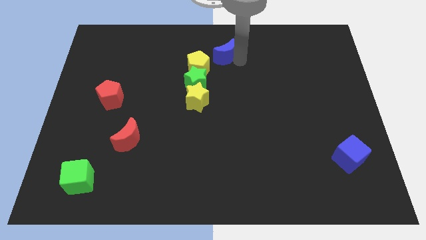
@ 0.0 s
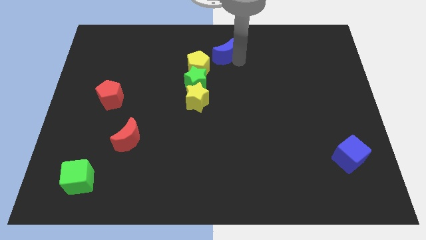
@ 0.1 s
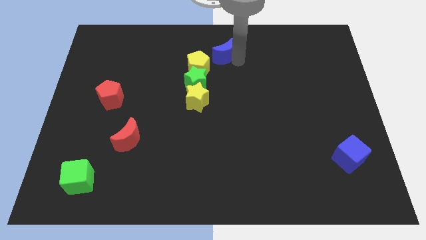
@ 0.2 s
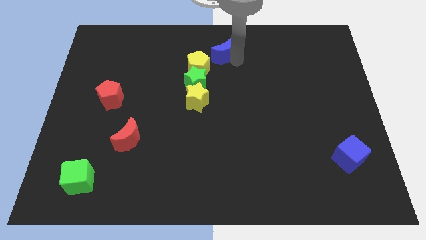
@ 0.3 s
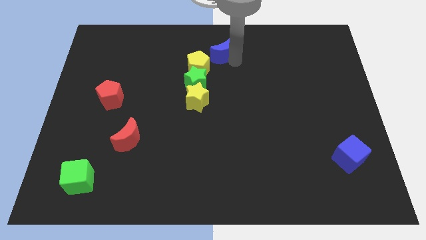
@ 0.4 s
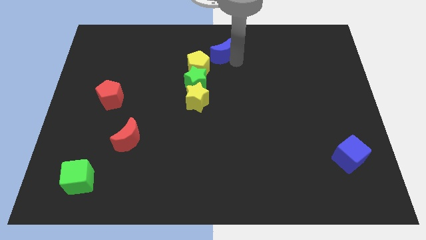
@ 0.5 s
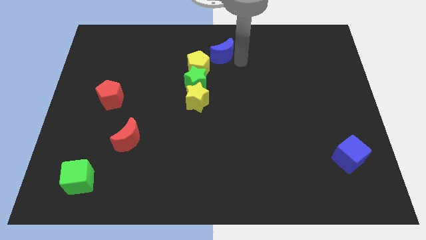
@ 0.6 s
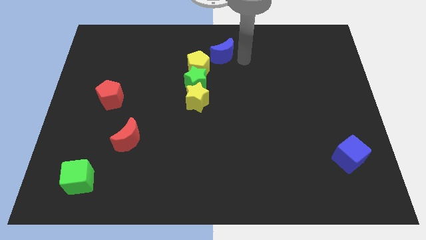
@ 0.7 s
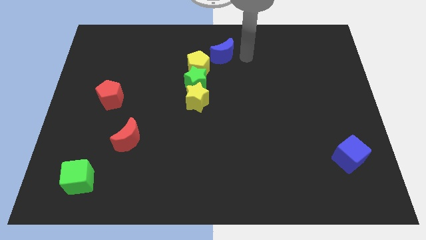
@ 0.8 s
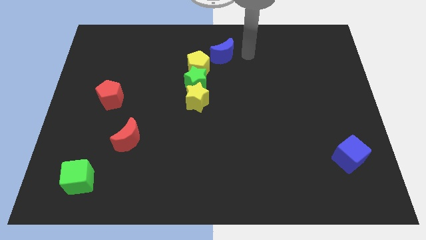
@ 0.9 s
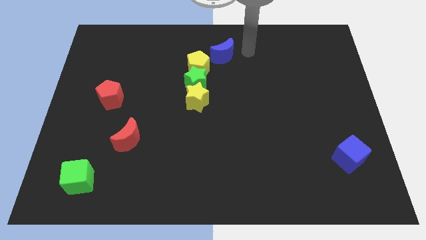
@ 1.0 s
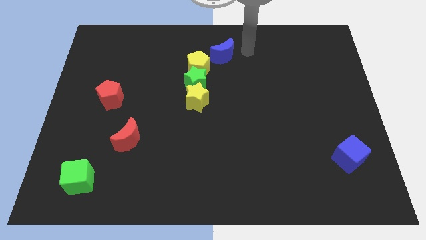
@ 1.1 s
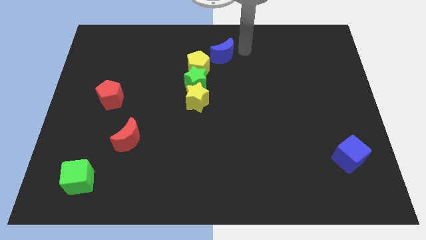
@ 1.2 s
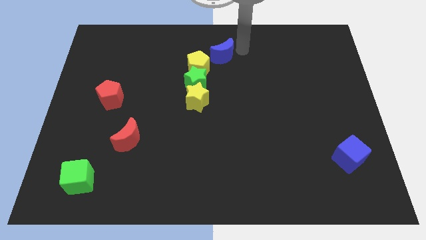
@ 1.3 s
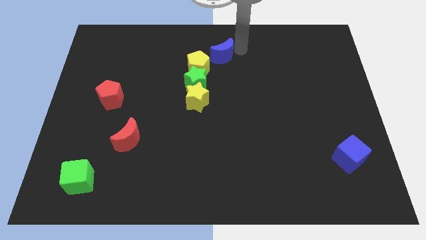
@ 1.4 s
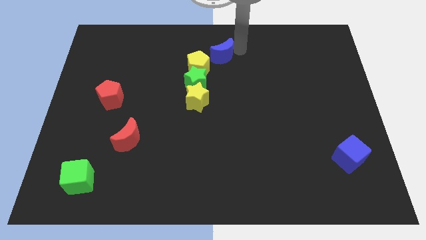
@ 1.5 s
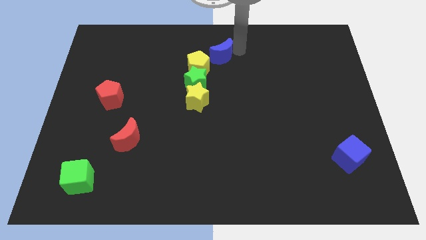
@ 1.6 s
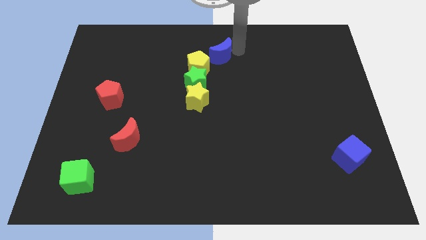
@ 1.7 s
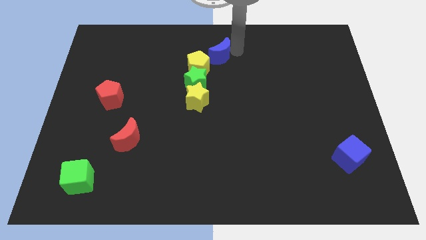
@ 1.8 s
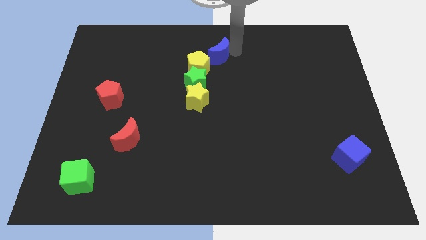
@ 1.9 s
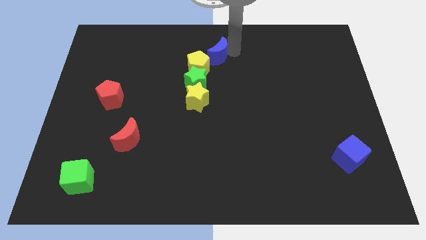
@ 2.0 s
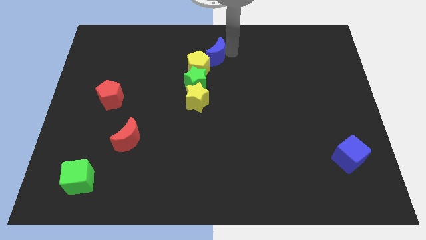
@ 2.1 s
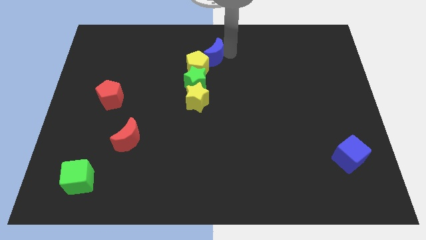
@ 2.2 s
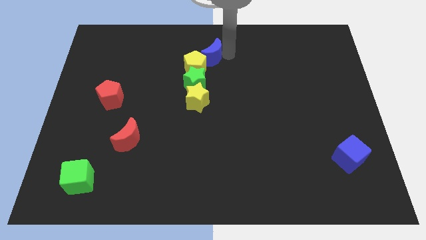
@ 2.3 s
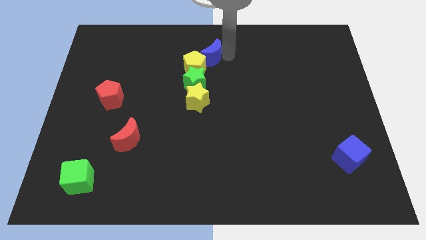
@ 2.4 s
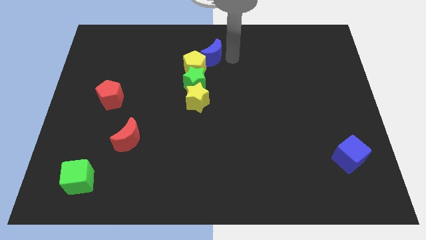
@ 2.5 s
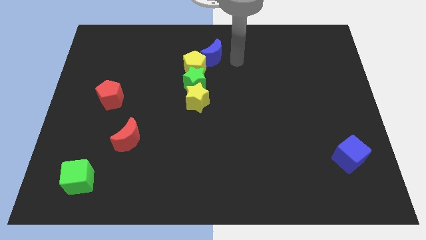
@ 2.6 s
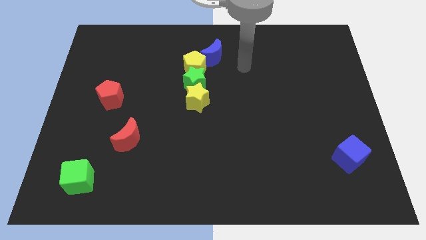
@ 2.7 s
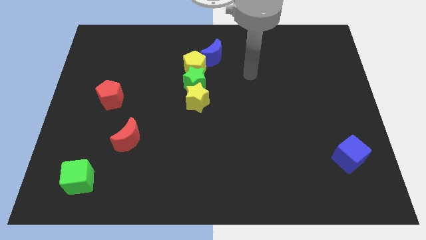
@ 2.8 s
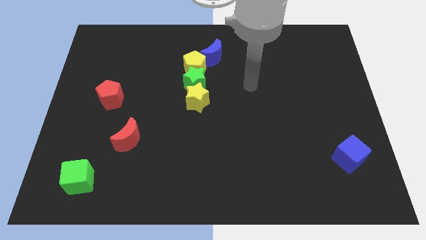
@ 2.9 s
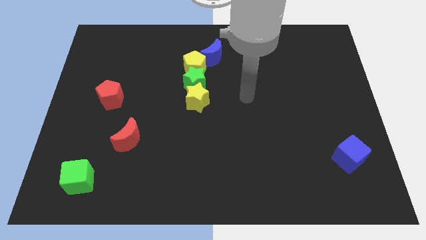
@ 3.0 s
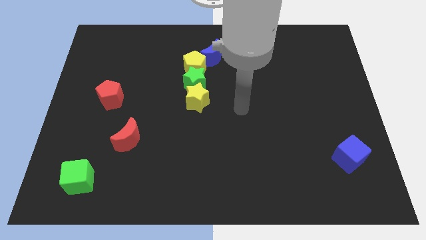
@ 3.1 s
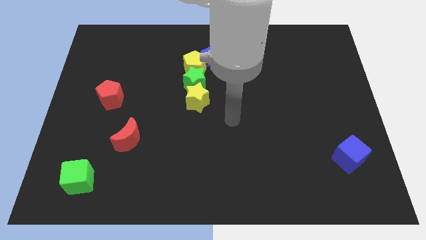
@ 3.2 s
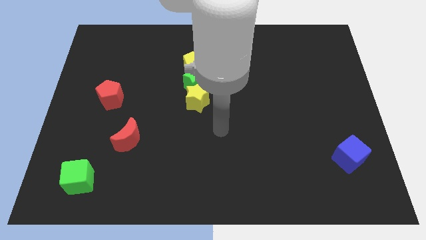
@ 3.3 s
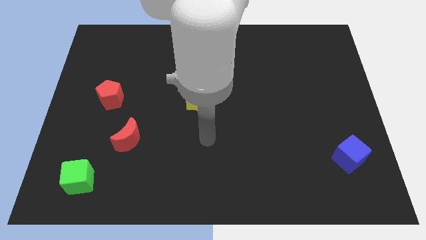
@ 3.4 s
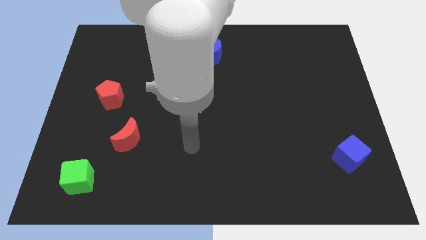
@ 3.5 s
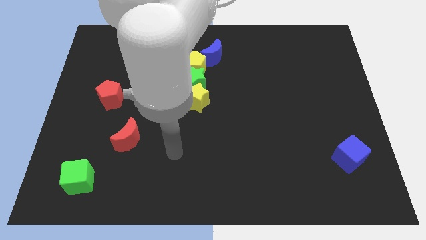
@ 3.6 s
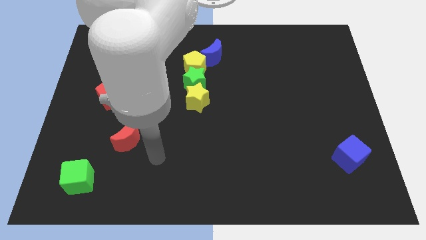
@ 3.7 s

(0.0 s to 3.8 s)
push blue moon in to yellow pentagon

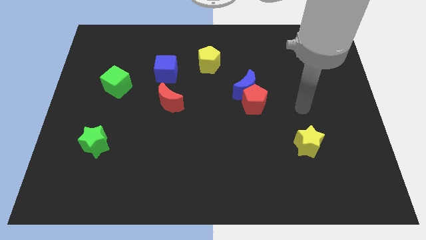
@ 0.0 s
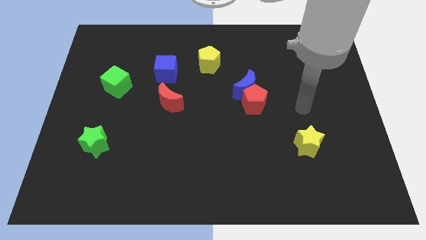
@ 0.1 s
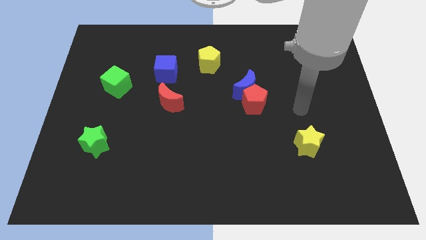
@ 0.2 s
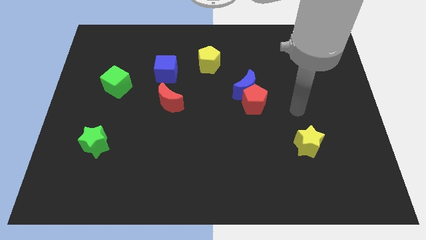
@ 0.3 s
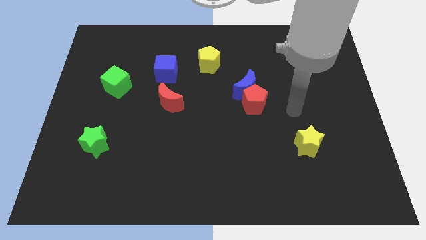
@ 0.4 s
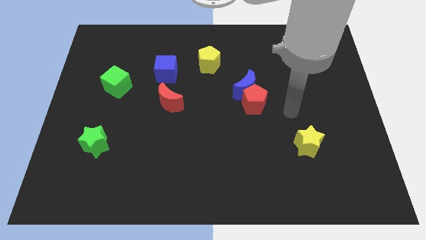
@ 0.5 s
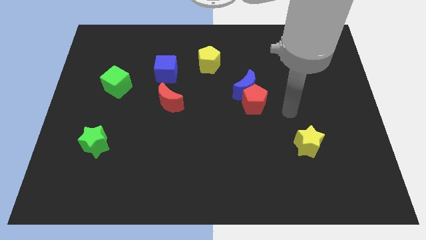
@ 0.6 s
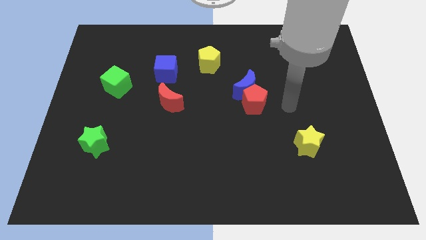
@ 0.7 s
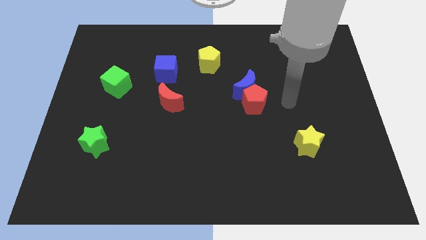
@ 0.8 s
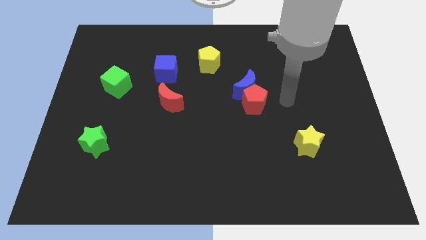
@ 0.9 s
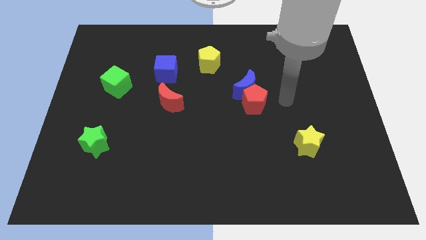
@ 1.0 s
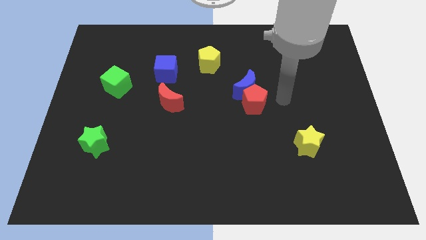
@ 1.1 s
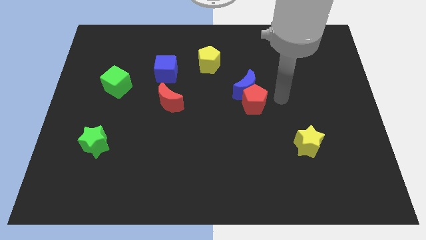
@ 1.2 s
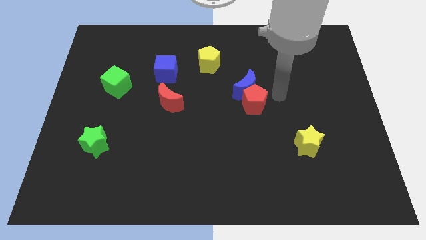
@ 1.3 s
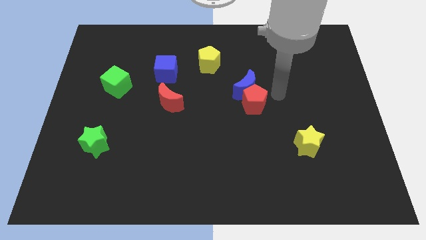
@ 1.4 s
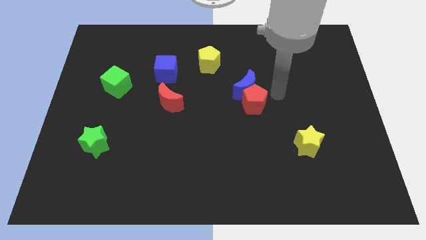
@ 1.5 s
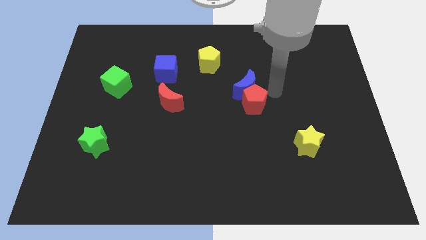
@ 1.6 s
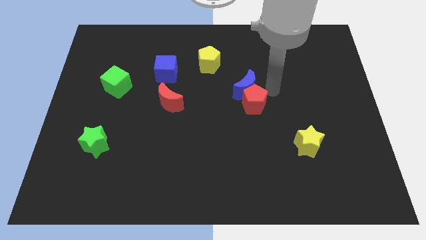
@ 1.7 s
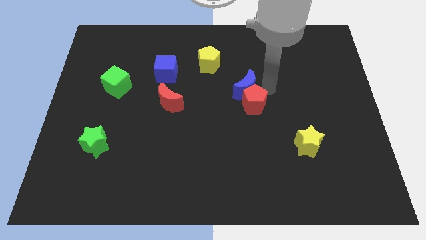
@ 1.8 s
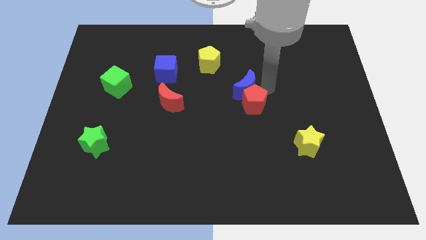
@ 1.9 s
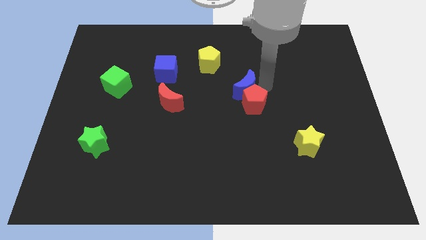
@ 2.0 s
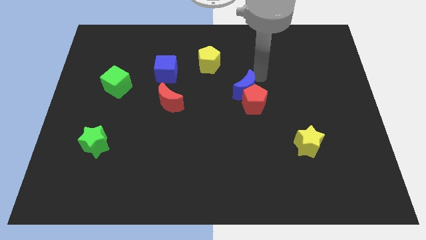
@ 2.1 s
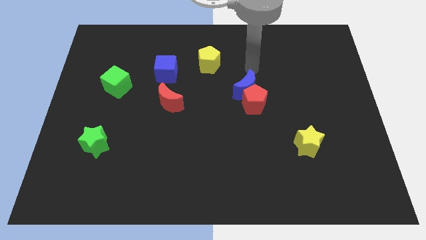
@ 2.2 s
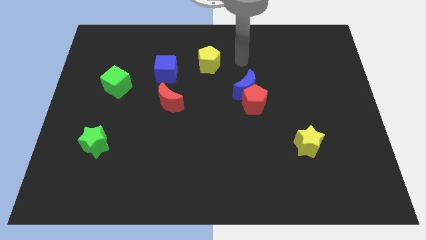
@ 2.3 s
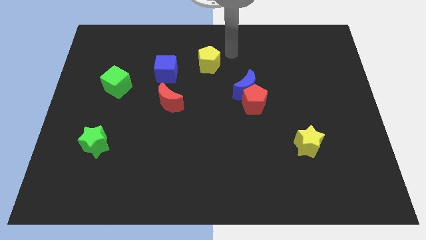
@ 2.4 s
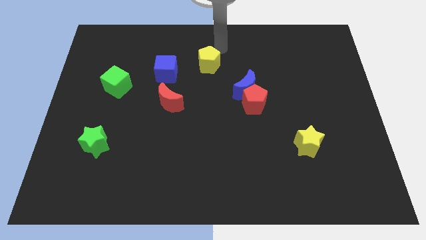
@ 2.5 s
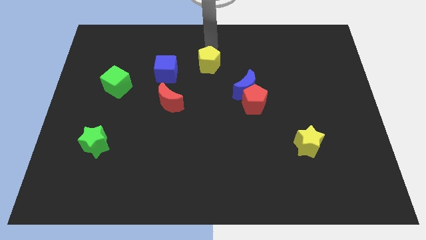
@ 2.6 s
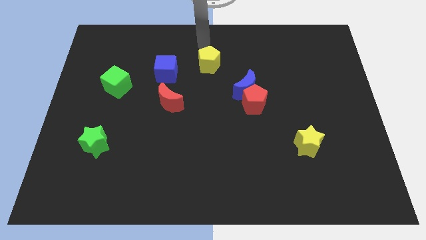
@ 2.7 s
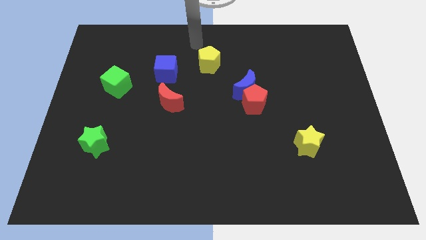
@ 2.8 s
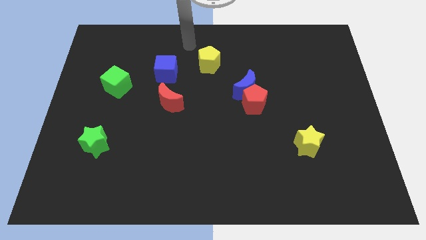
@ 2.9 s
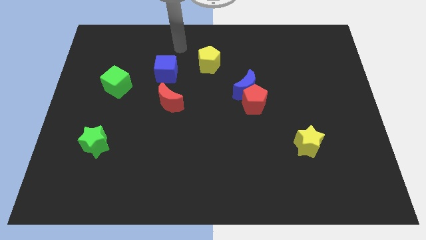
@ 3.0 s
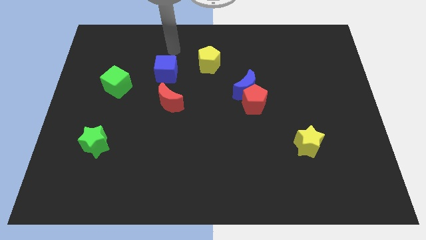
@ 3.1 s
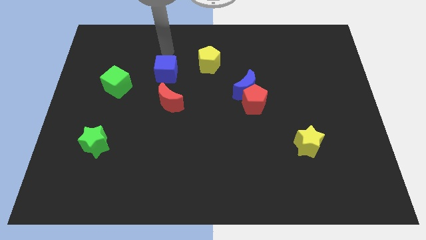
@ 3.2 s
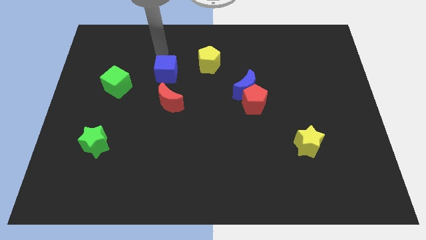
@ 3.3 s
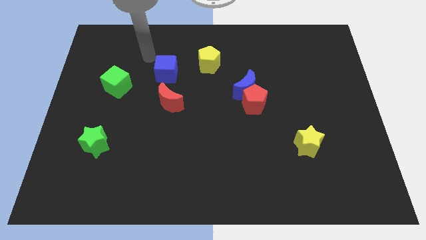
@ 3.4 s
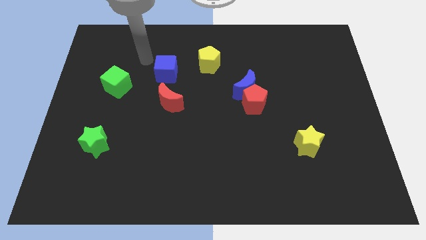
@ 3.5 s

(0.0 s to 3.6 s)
place your arm at the left side of the blue cube

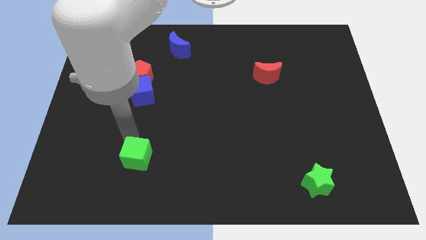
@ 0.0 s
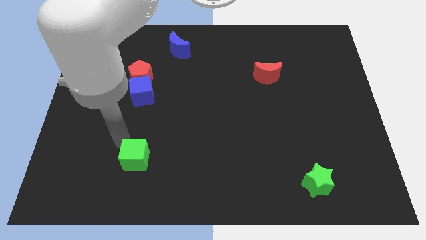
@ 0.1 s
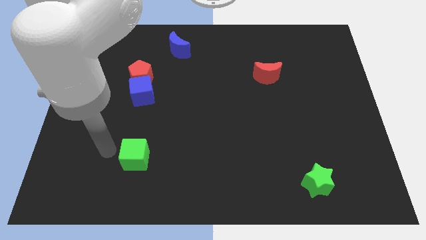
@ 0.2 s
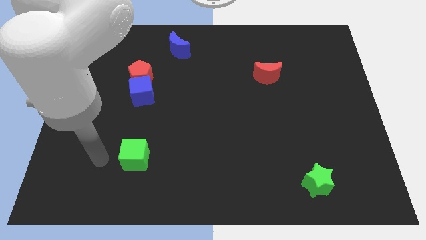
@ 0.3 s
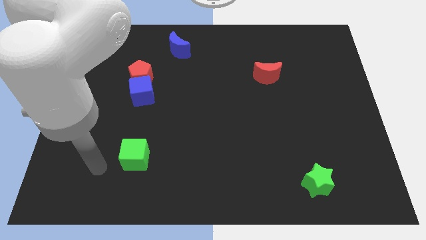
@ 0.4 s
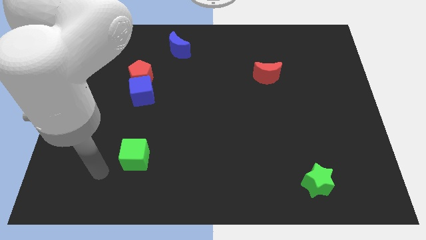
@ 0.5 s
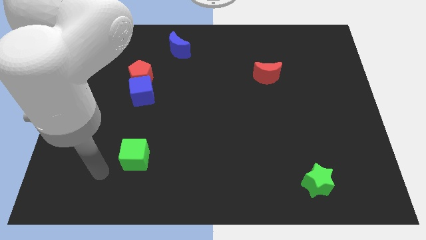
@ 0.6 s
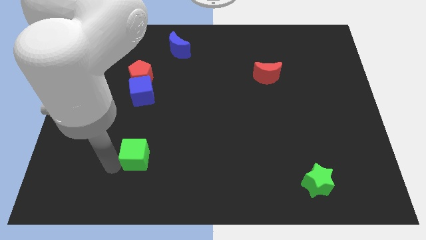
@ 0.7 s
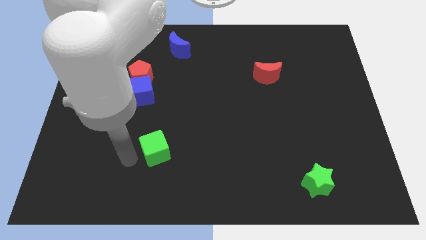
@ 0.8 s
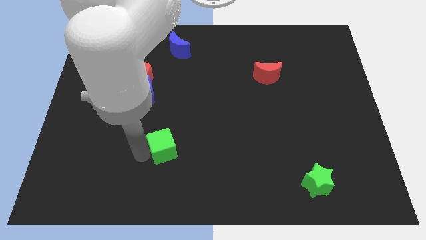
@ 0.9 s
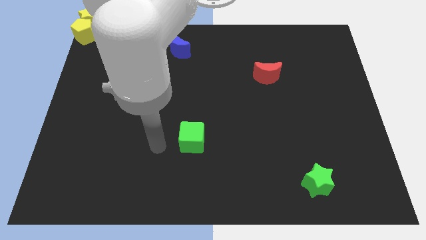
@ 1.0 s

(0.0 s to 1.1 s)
push the green cube towards the center of the board

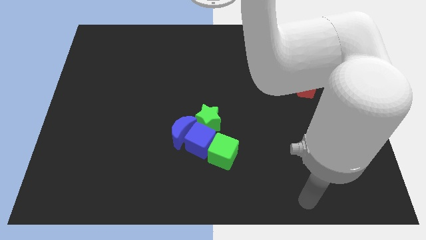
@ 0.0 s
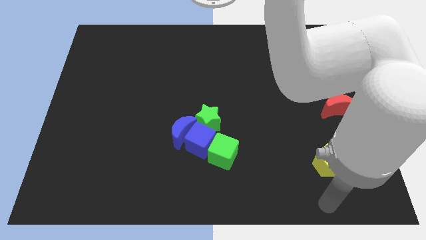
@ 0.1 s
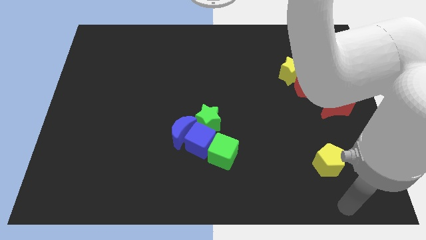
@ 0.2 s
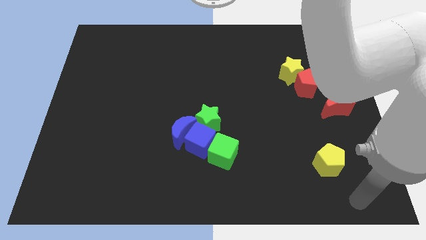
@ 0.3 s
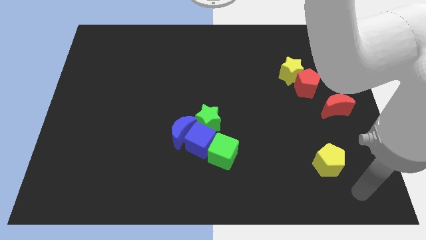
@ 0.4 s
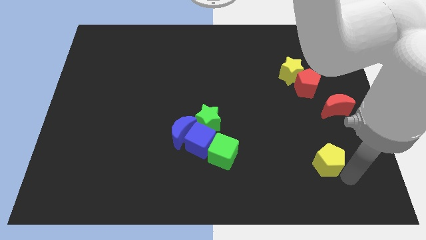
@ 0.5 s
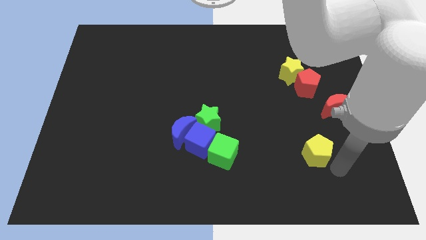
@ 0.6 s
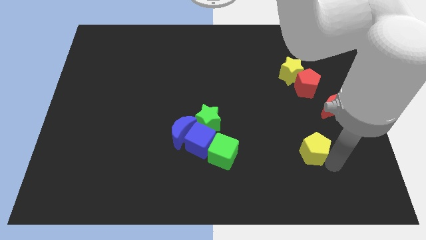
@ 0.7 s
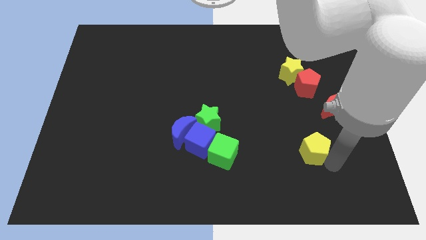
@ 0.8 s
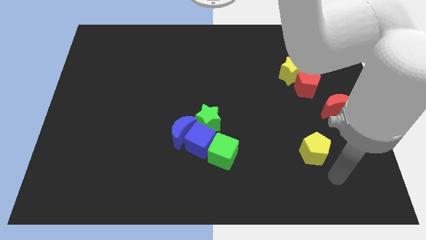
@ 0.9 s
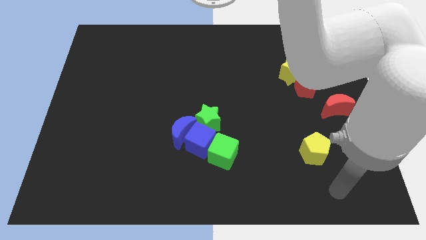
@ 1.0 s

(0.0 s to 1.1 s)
slightly move the yellow pentagon
